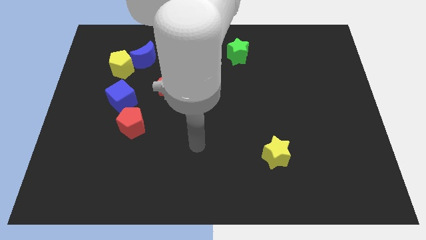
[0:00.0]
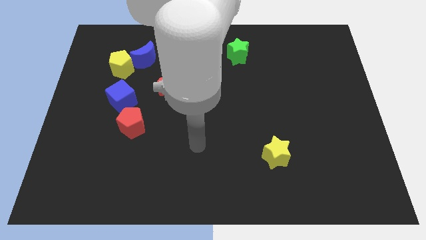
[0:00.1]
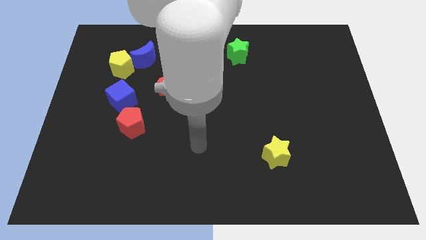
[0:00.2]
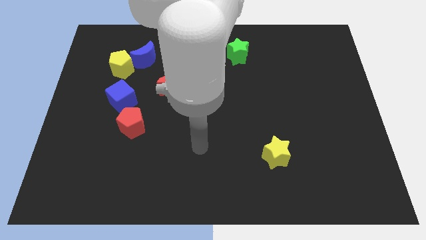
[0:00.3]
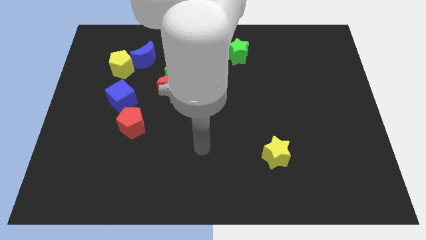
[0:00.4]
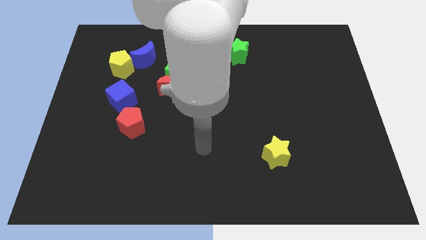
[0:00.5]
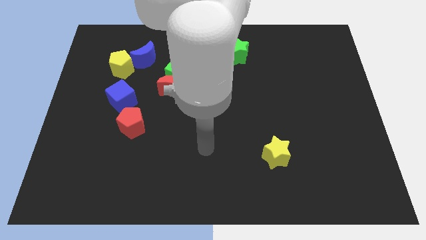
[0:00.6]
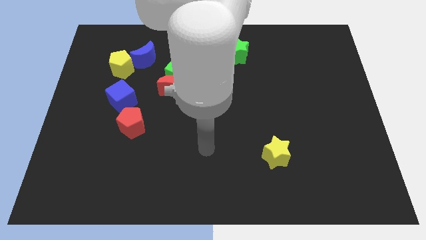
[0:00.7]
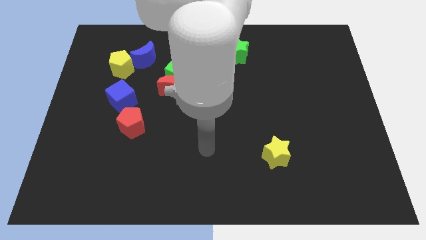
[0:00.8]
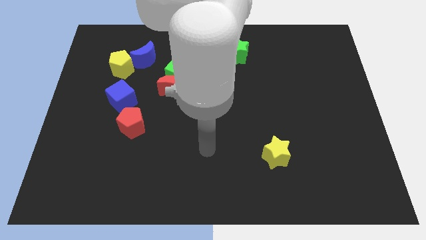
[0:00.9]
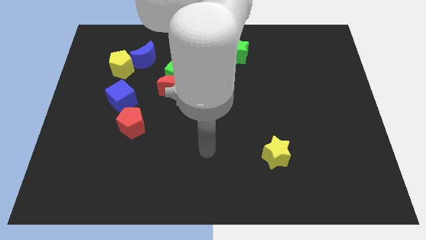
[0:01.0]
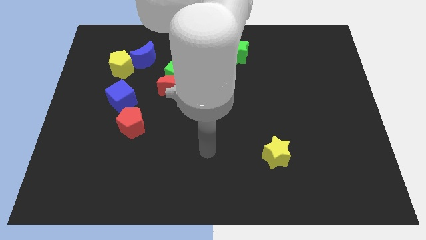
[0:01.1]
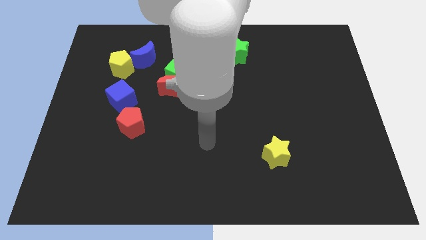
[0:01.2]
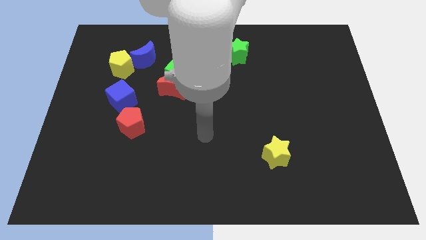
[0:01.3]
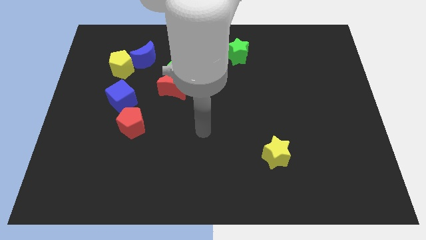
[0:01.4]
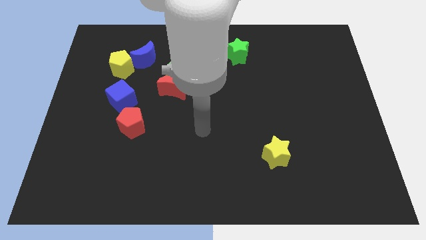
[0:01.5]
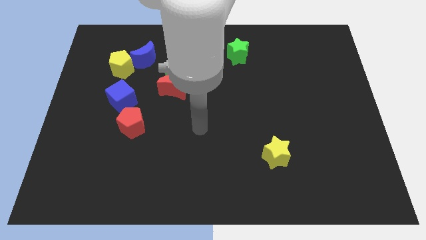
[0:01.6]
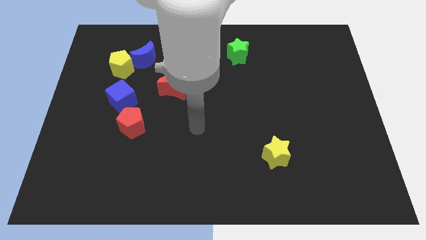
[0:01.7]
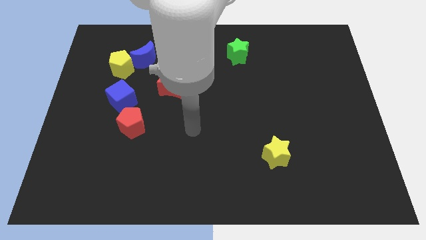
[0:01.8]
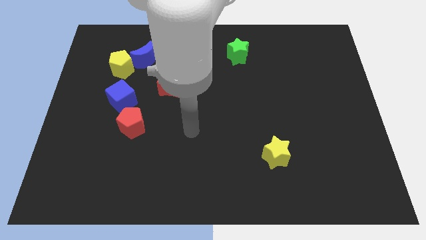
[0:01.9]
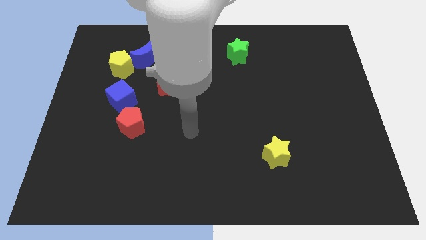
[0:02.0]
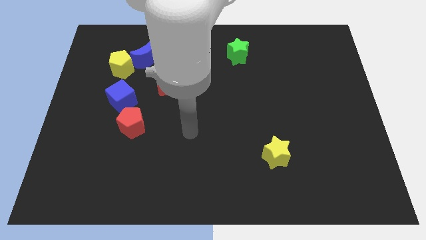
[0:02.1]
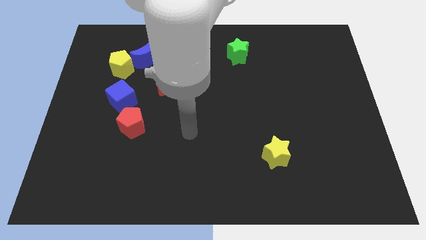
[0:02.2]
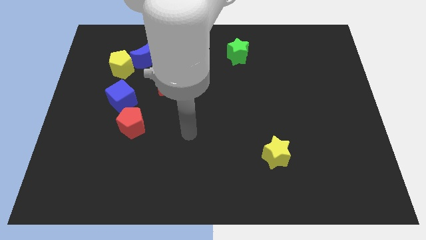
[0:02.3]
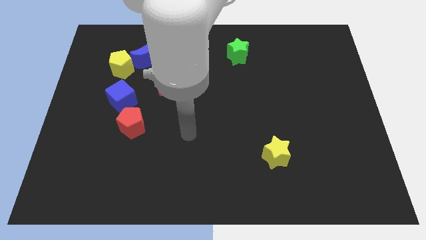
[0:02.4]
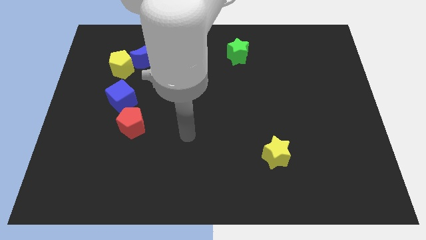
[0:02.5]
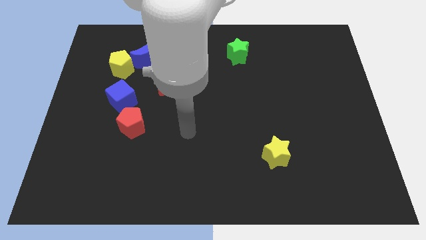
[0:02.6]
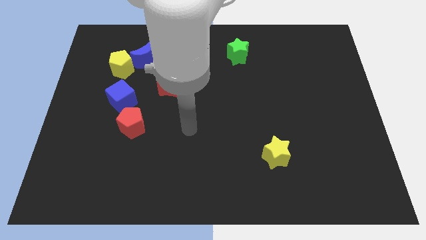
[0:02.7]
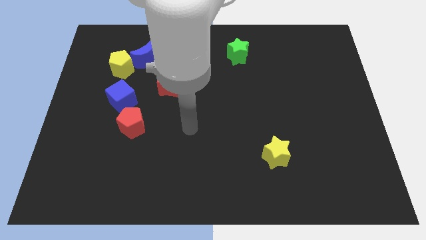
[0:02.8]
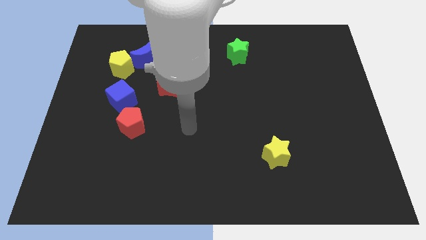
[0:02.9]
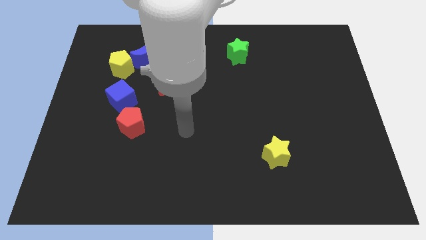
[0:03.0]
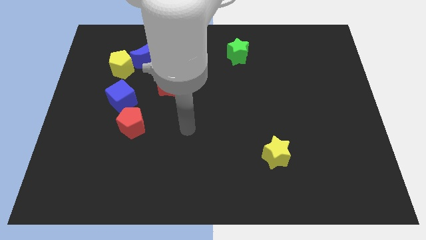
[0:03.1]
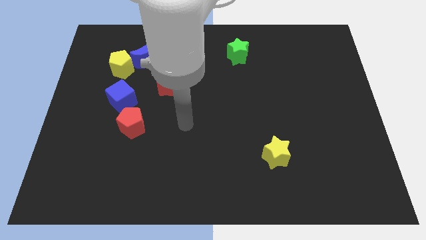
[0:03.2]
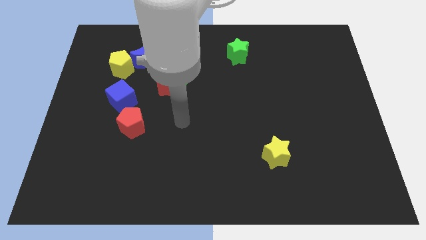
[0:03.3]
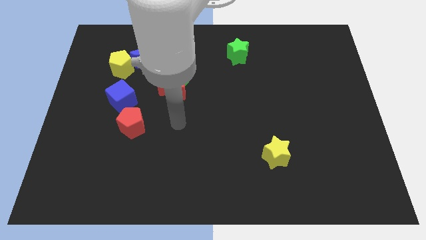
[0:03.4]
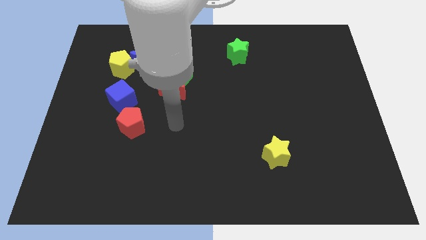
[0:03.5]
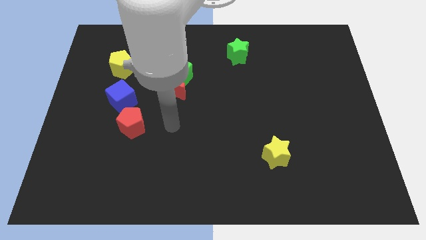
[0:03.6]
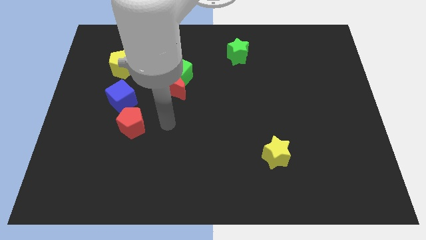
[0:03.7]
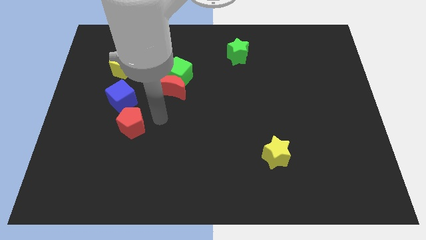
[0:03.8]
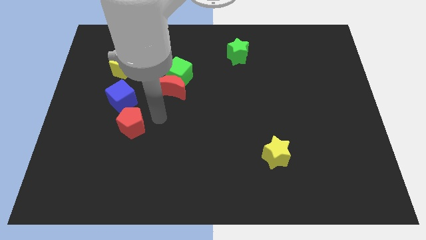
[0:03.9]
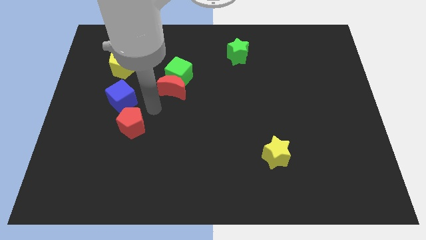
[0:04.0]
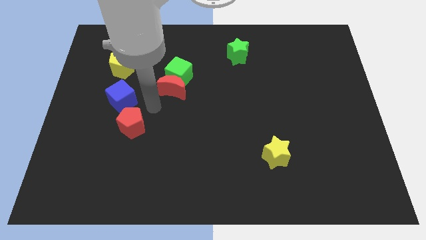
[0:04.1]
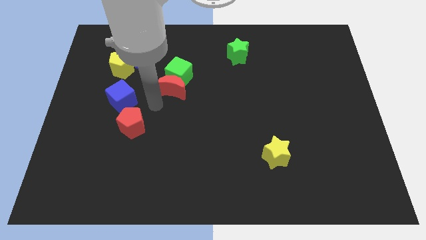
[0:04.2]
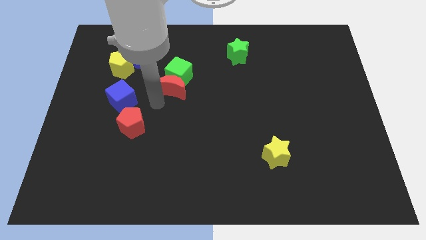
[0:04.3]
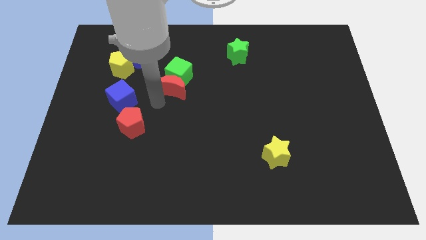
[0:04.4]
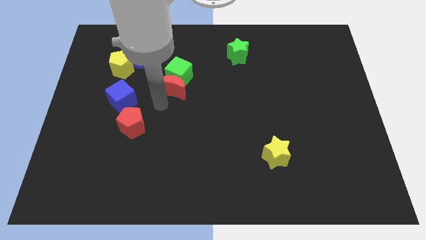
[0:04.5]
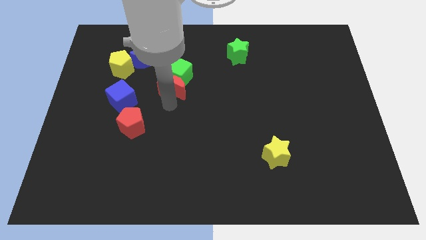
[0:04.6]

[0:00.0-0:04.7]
go near the red moon

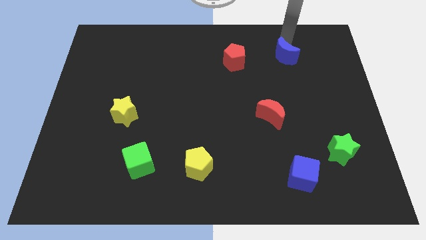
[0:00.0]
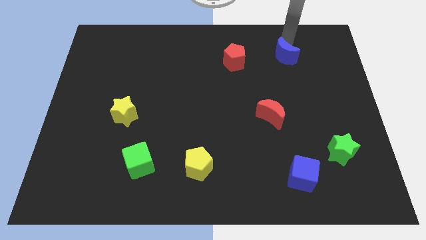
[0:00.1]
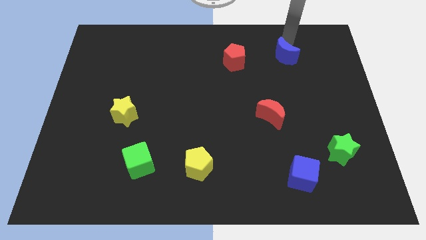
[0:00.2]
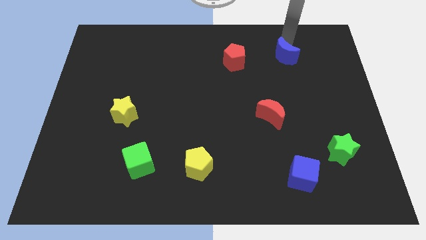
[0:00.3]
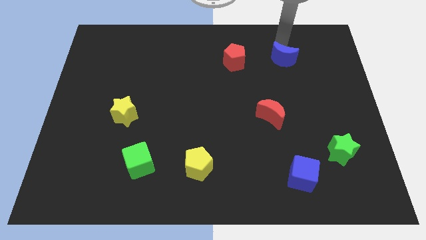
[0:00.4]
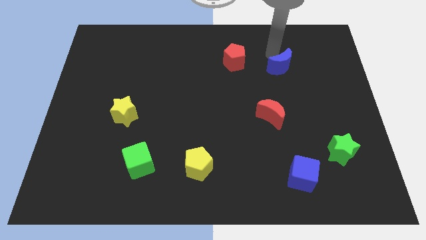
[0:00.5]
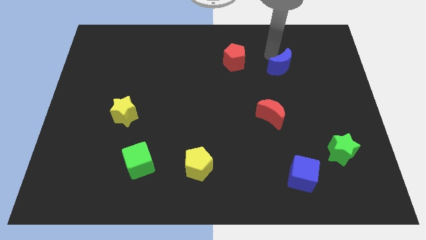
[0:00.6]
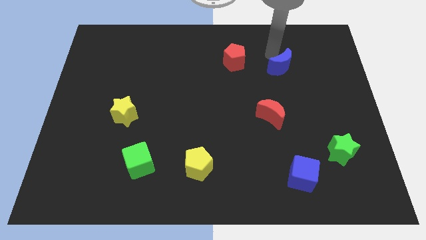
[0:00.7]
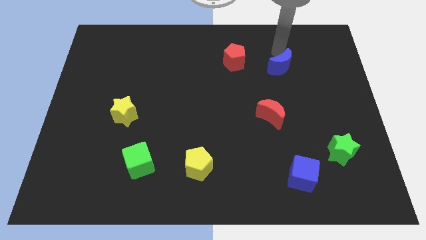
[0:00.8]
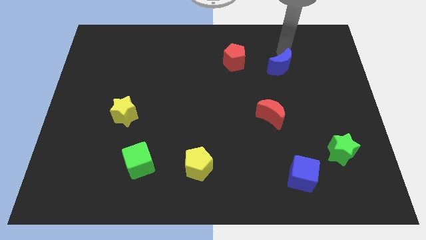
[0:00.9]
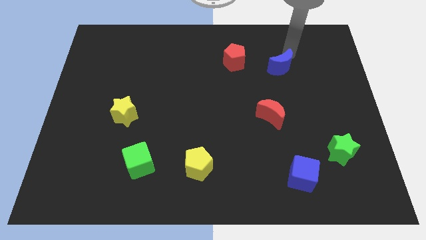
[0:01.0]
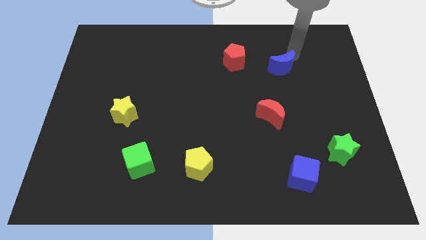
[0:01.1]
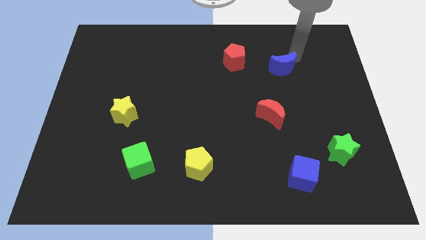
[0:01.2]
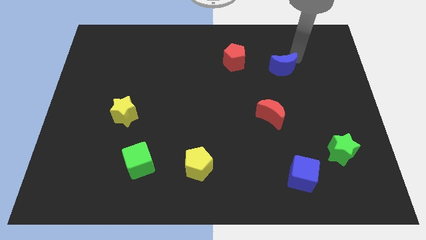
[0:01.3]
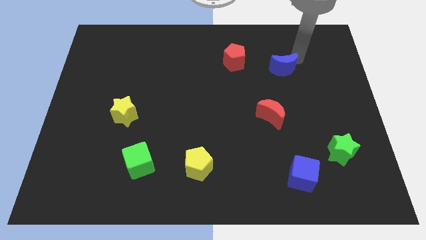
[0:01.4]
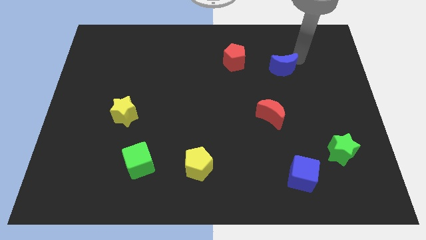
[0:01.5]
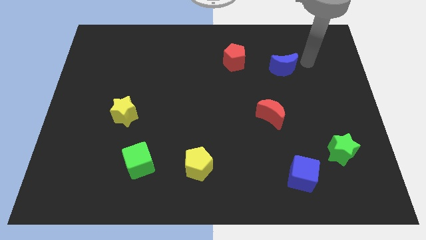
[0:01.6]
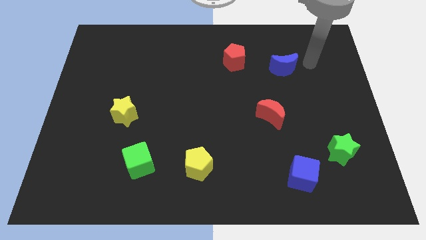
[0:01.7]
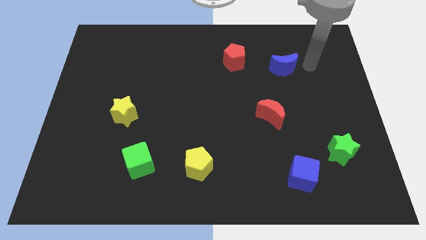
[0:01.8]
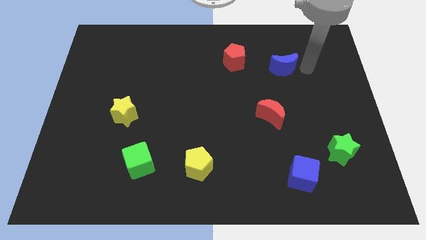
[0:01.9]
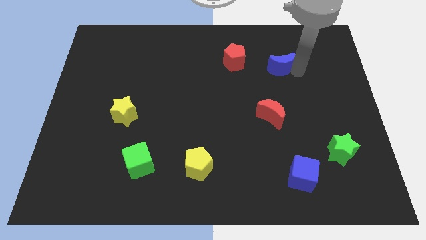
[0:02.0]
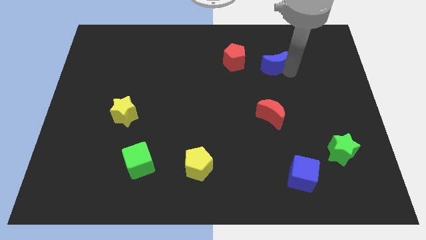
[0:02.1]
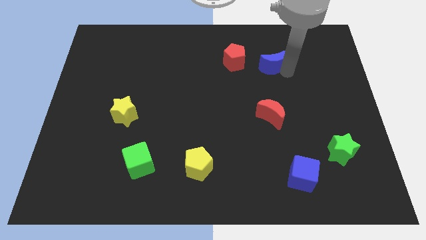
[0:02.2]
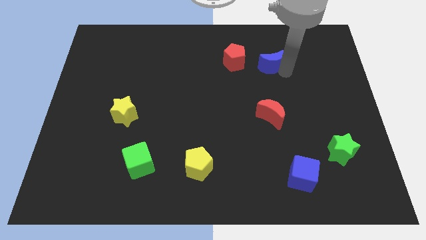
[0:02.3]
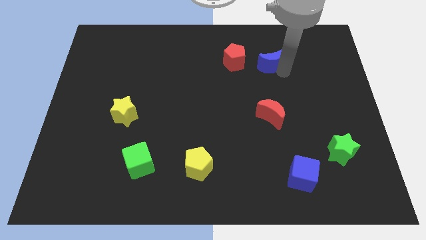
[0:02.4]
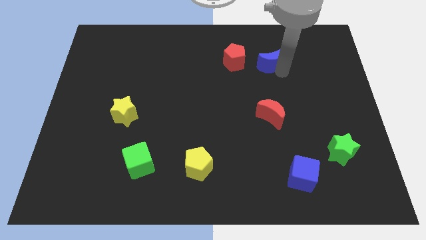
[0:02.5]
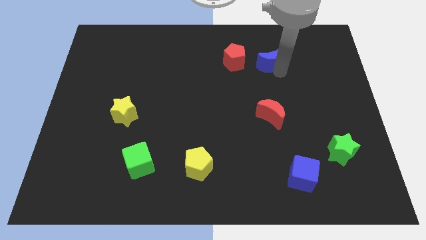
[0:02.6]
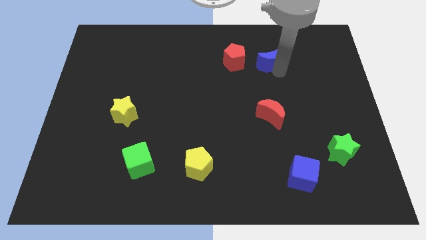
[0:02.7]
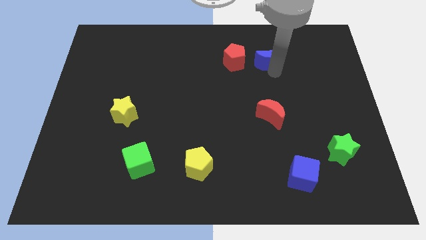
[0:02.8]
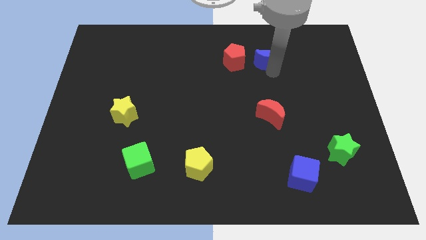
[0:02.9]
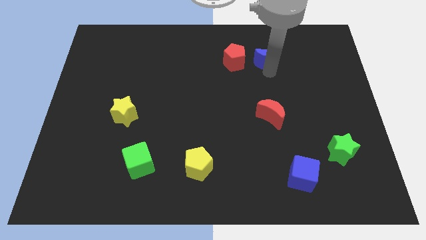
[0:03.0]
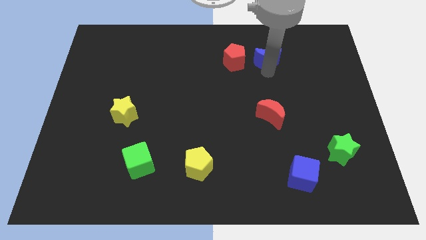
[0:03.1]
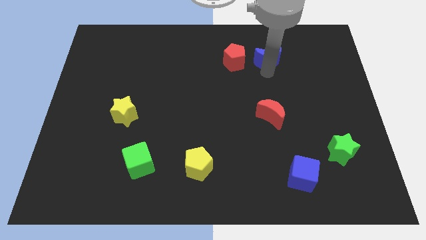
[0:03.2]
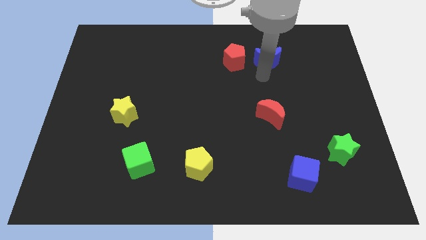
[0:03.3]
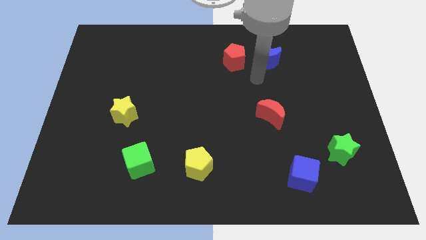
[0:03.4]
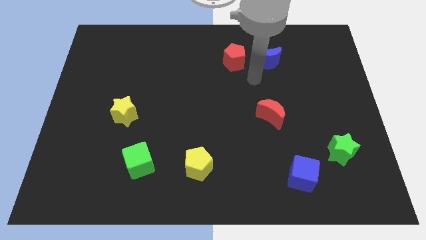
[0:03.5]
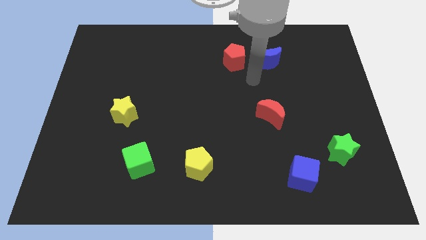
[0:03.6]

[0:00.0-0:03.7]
place the blue crescent right to the red pentagon

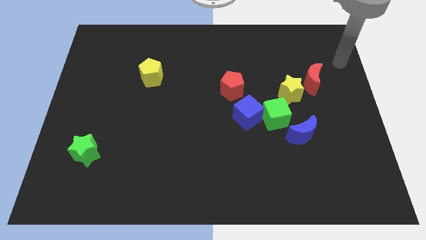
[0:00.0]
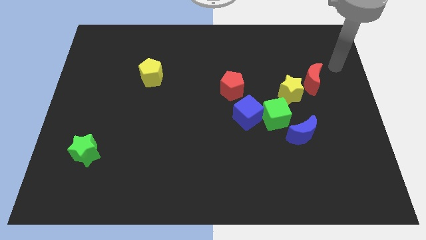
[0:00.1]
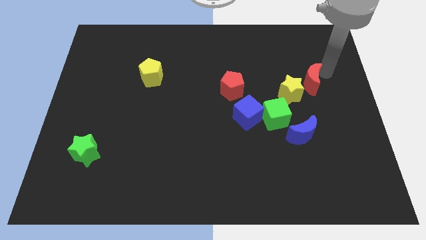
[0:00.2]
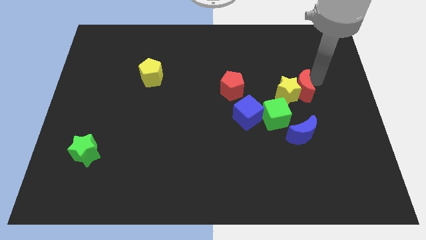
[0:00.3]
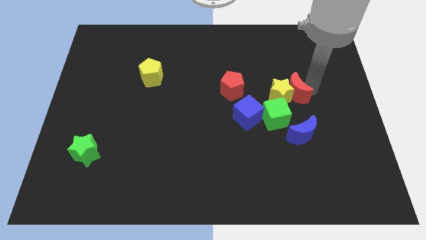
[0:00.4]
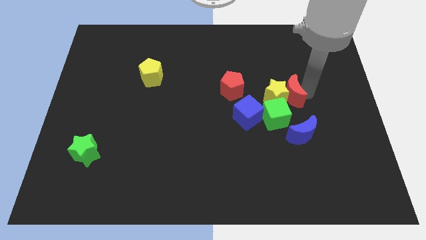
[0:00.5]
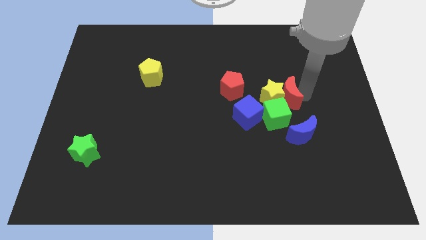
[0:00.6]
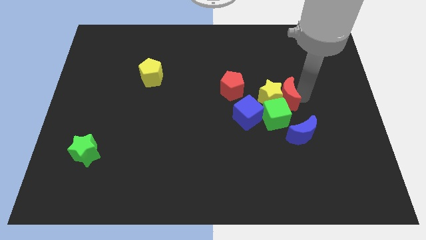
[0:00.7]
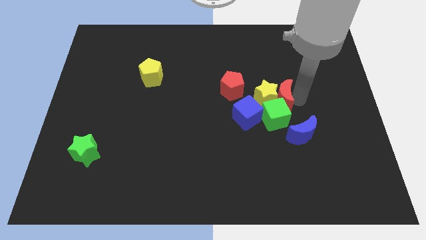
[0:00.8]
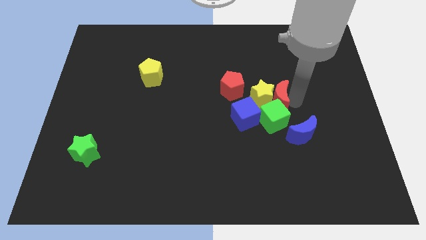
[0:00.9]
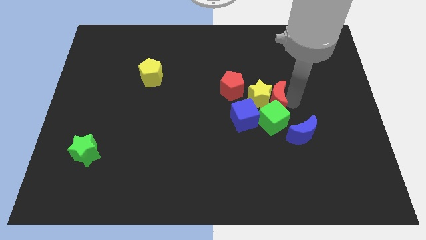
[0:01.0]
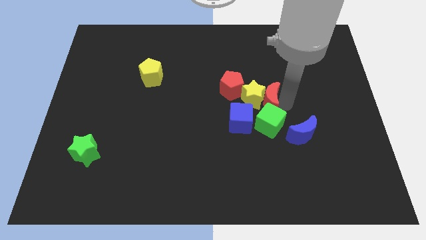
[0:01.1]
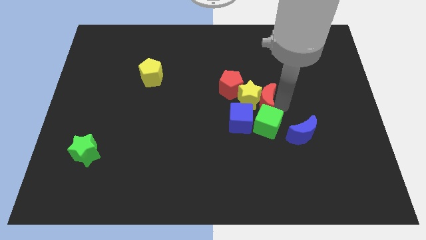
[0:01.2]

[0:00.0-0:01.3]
push the yellow star and red moon into the group of blocks
